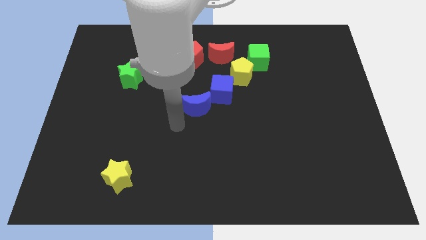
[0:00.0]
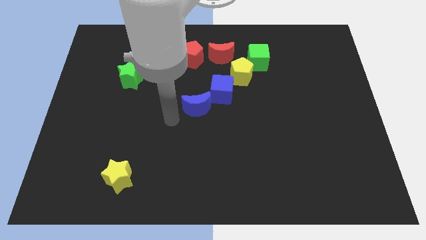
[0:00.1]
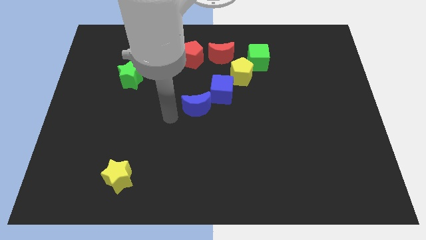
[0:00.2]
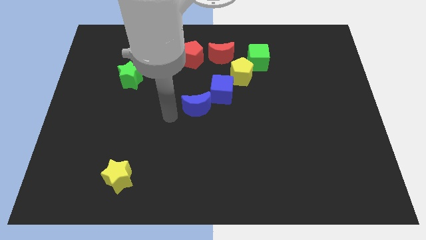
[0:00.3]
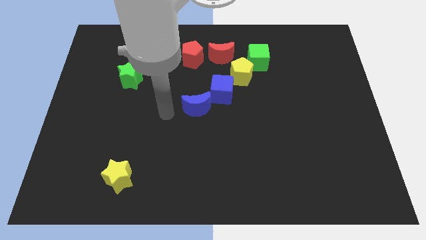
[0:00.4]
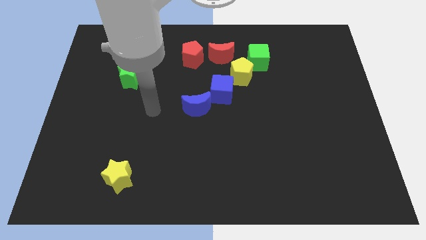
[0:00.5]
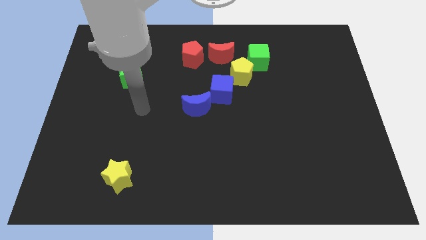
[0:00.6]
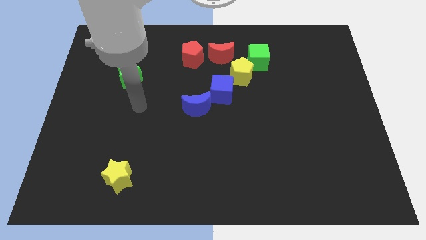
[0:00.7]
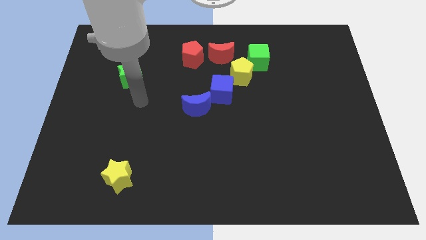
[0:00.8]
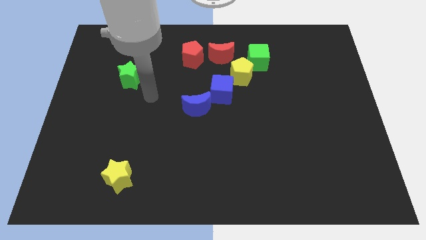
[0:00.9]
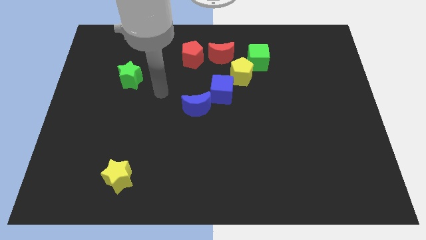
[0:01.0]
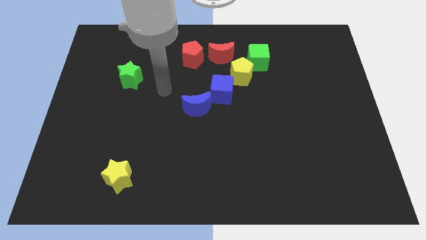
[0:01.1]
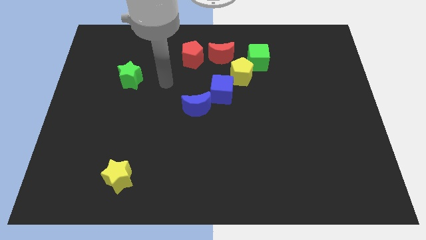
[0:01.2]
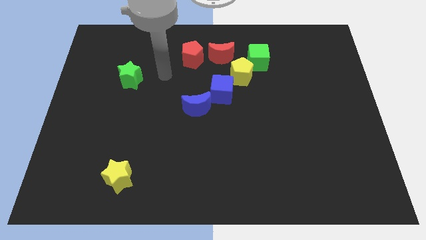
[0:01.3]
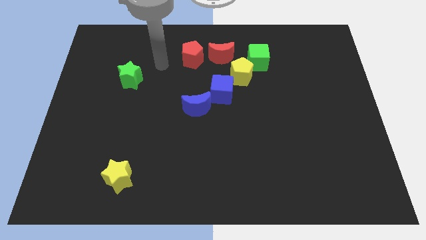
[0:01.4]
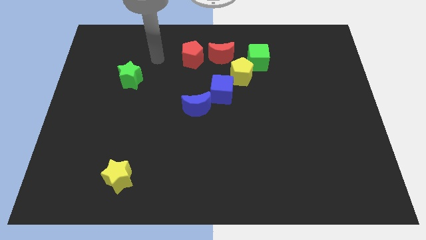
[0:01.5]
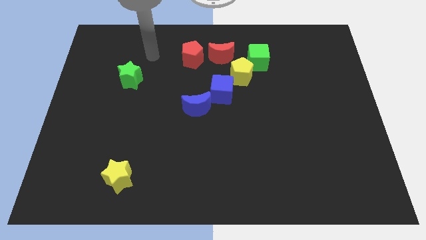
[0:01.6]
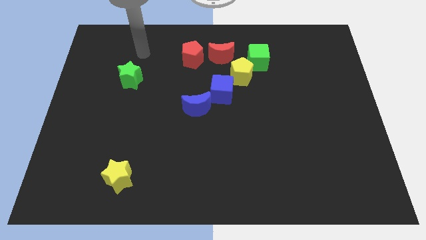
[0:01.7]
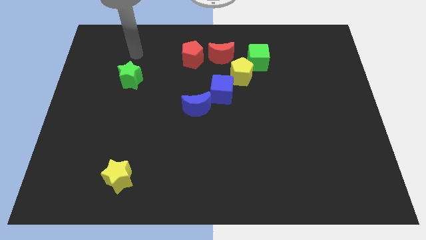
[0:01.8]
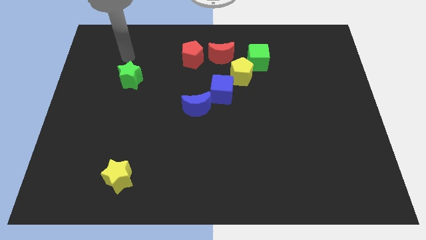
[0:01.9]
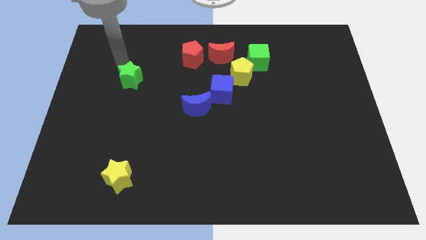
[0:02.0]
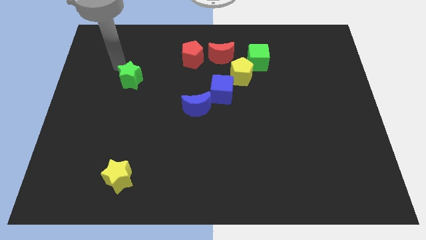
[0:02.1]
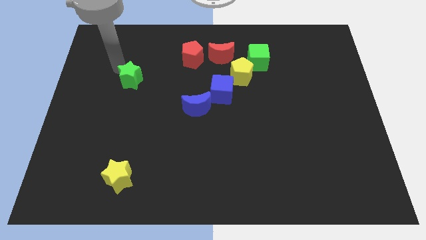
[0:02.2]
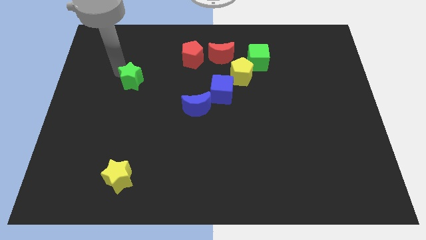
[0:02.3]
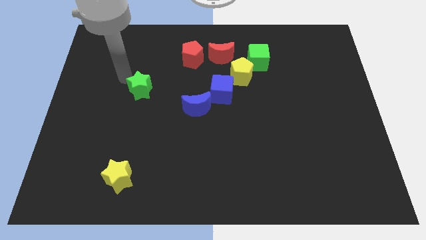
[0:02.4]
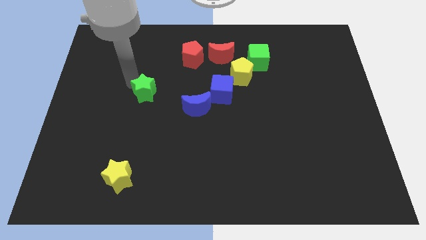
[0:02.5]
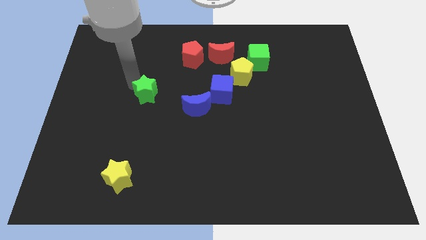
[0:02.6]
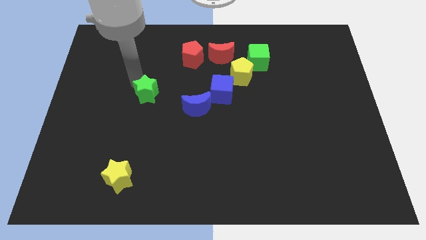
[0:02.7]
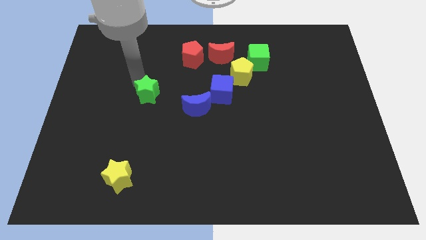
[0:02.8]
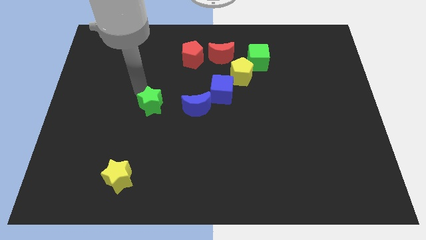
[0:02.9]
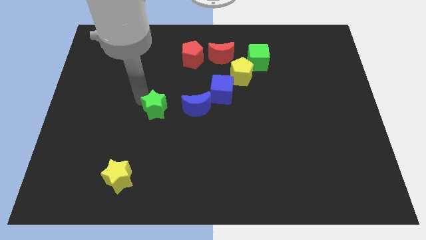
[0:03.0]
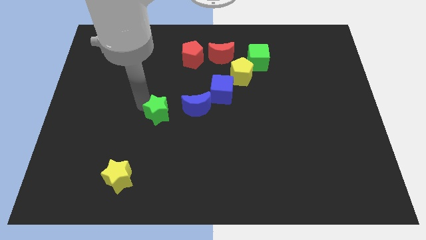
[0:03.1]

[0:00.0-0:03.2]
push the green star to the left of the blue crescent

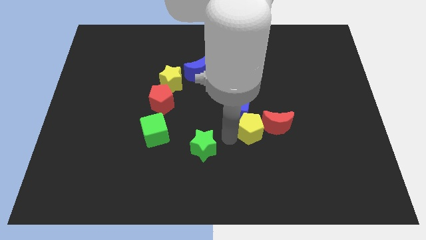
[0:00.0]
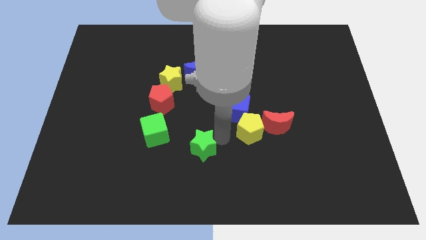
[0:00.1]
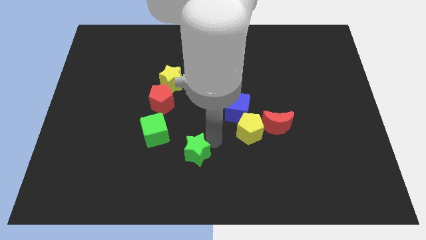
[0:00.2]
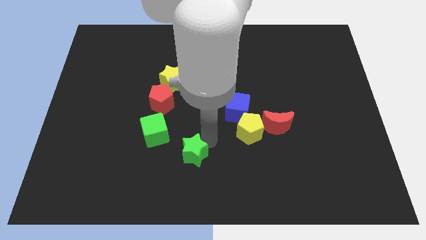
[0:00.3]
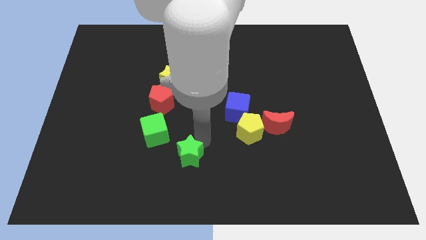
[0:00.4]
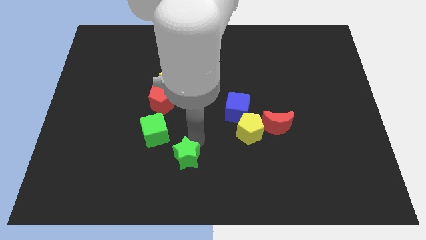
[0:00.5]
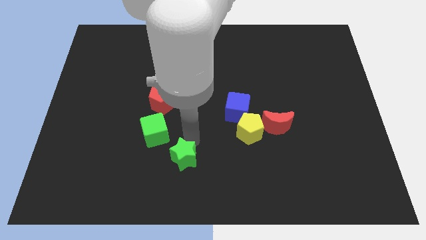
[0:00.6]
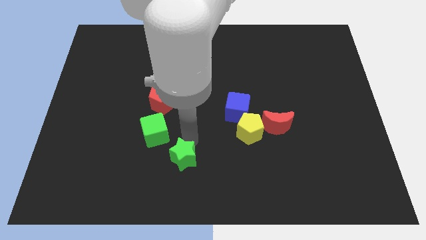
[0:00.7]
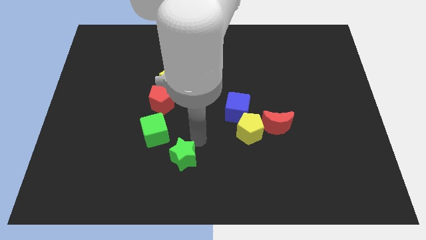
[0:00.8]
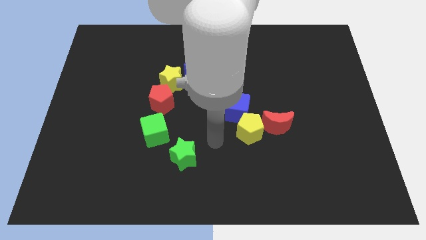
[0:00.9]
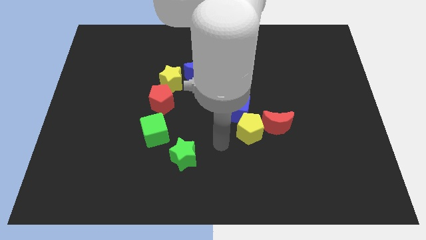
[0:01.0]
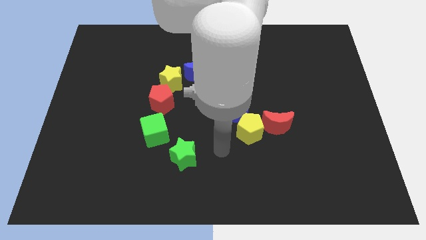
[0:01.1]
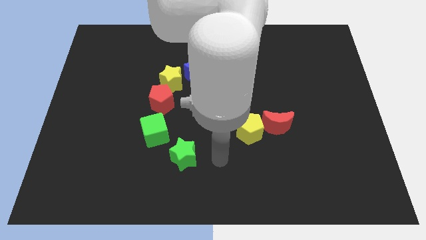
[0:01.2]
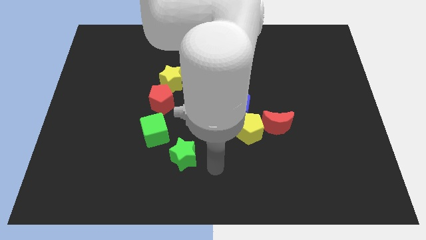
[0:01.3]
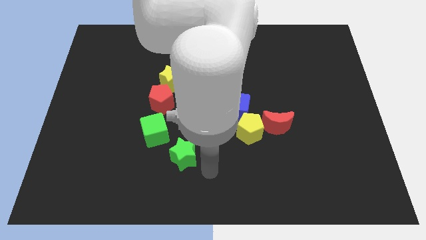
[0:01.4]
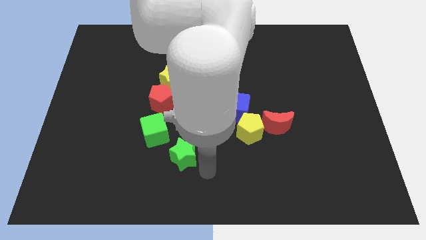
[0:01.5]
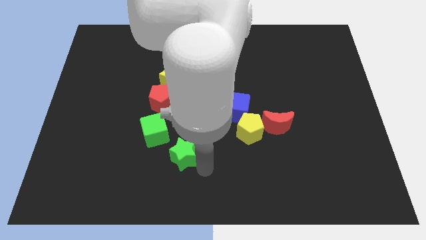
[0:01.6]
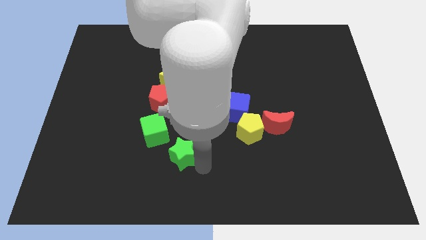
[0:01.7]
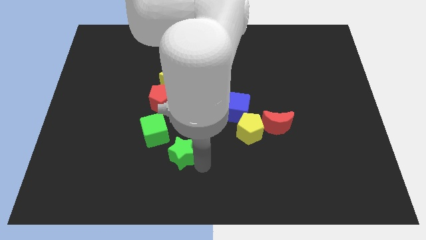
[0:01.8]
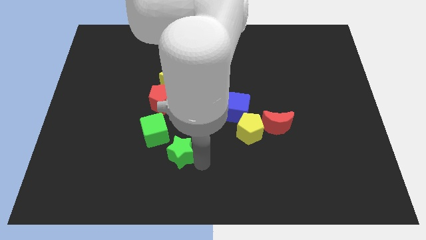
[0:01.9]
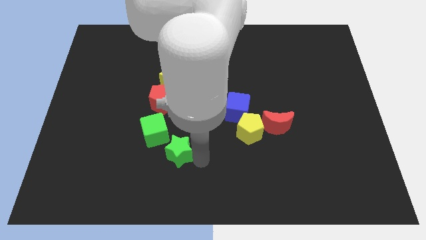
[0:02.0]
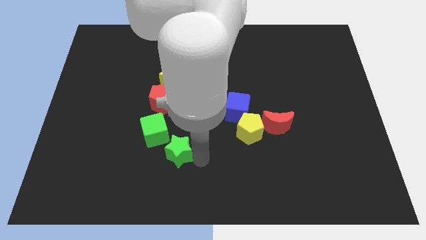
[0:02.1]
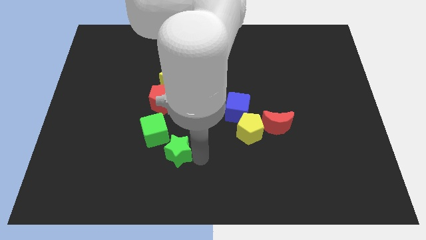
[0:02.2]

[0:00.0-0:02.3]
push the green star to the bottom right of the green cube

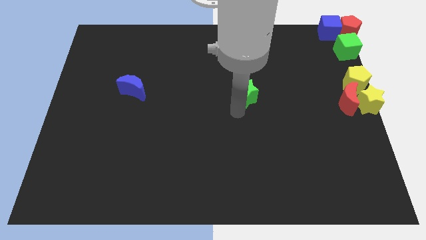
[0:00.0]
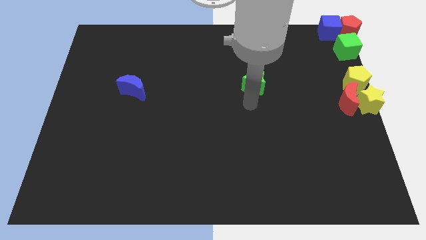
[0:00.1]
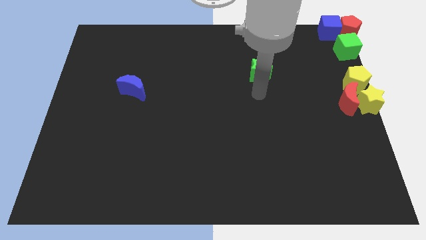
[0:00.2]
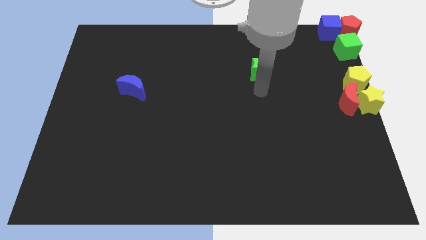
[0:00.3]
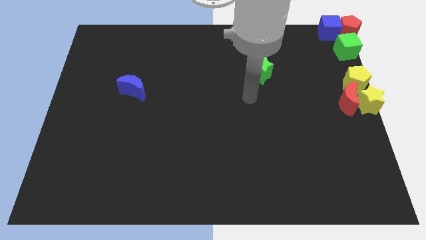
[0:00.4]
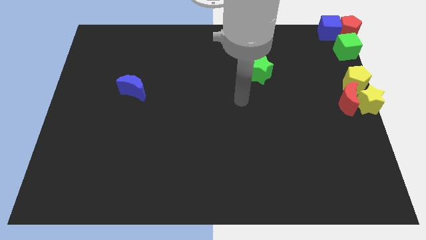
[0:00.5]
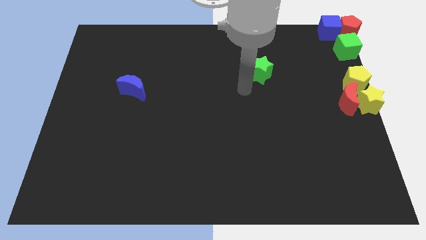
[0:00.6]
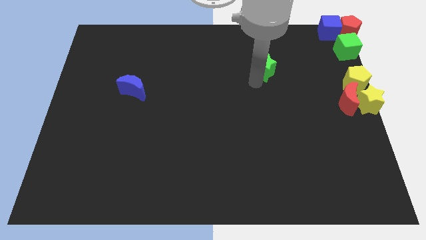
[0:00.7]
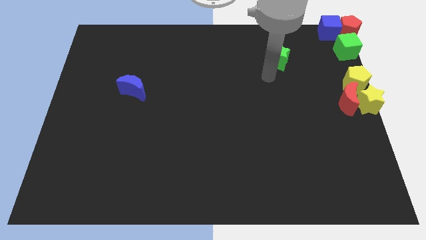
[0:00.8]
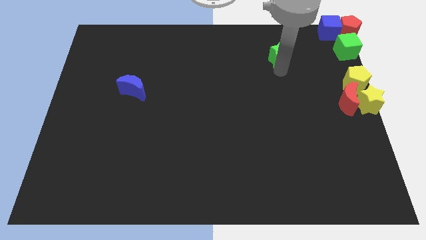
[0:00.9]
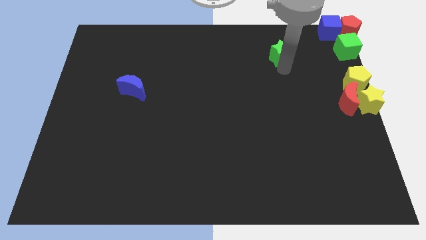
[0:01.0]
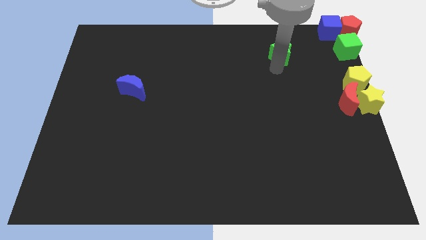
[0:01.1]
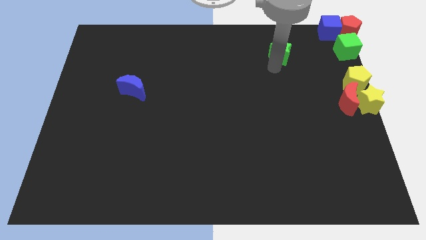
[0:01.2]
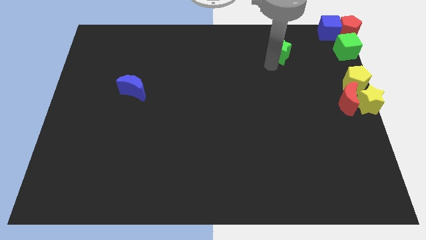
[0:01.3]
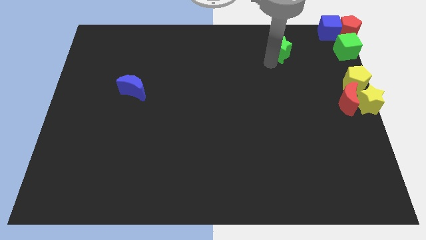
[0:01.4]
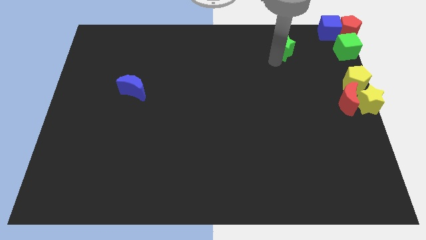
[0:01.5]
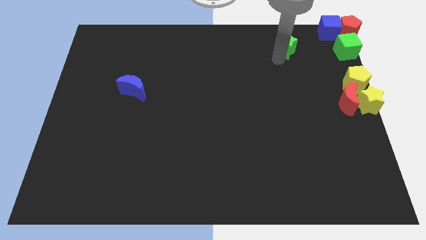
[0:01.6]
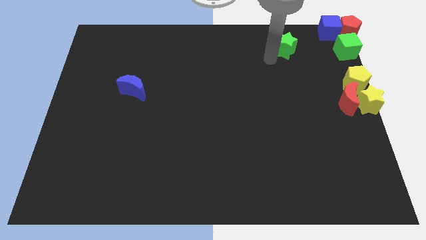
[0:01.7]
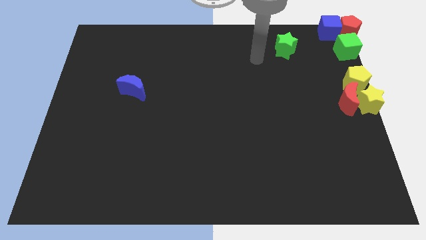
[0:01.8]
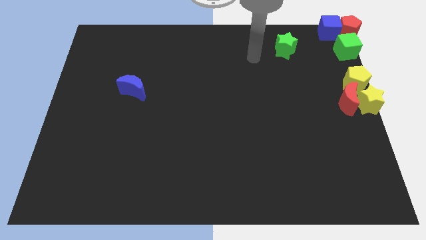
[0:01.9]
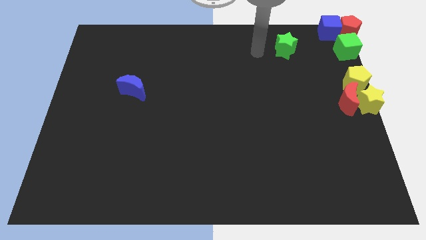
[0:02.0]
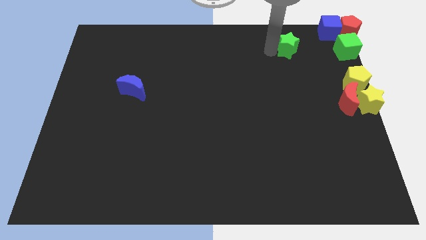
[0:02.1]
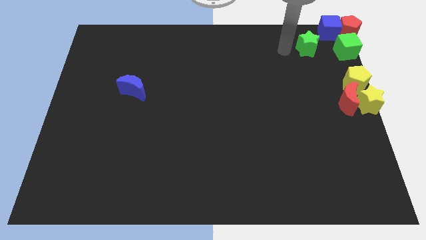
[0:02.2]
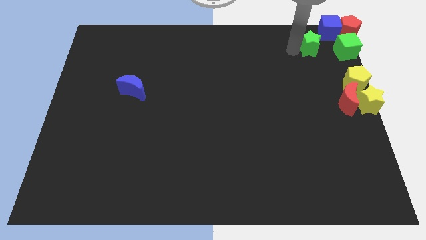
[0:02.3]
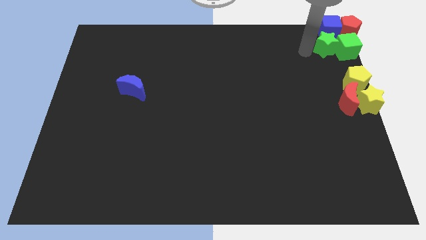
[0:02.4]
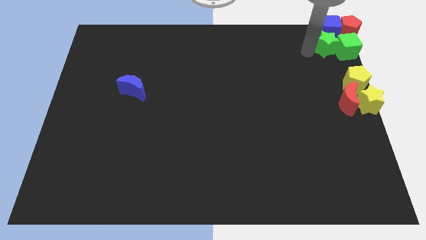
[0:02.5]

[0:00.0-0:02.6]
push the green star towards the top right corner of the board

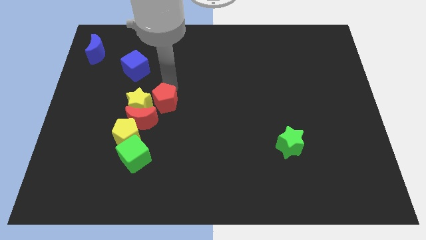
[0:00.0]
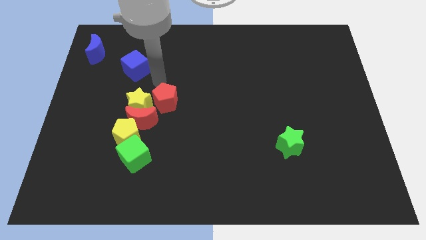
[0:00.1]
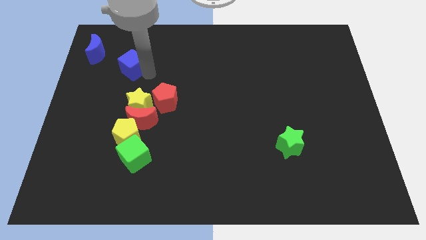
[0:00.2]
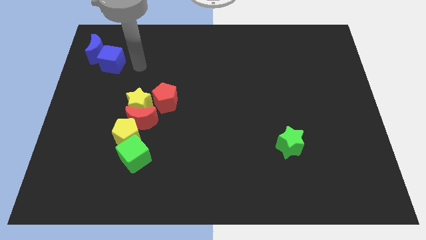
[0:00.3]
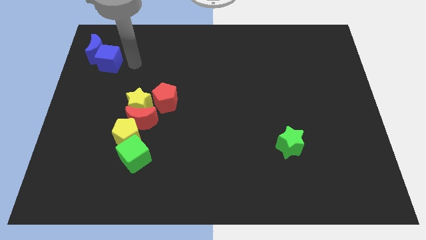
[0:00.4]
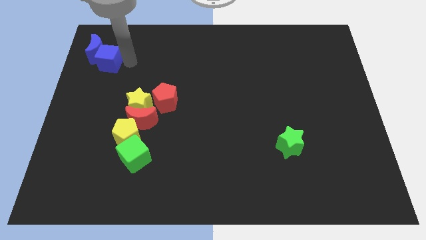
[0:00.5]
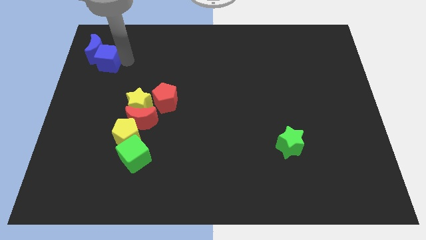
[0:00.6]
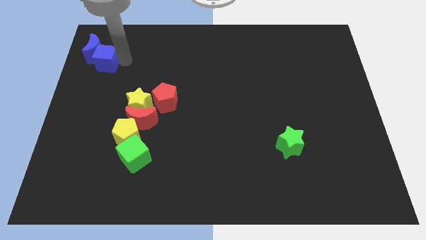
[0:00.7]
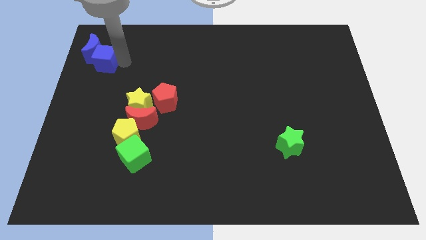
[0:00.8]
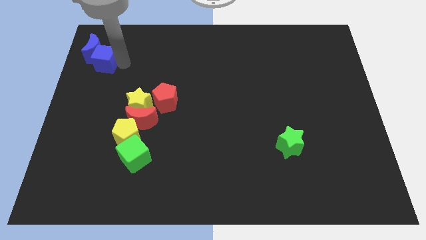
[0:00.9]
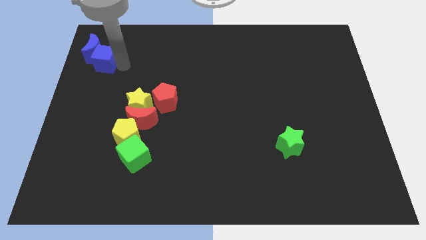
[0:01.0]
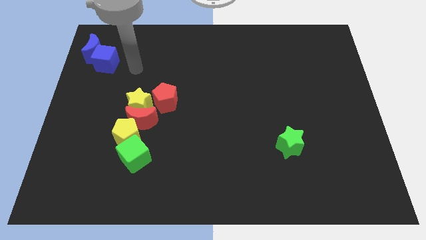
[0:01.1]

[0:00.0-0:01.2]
push the blue cube into the blue moon
